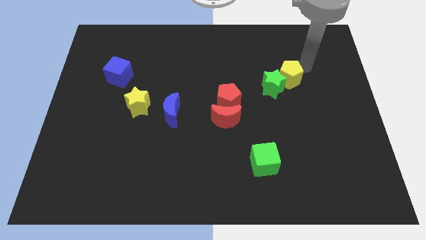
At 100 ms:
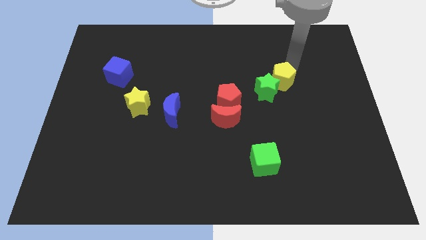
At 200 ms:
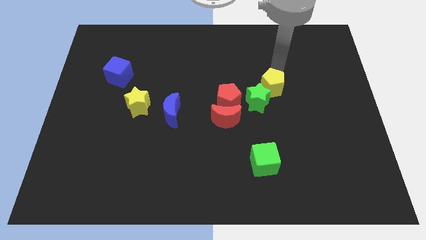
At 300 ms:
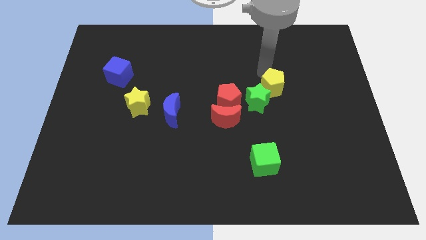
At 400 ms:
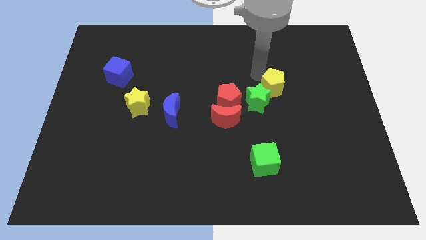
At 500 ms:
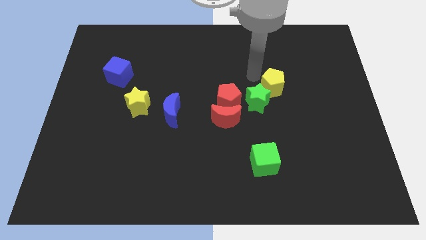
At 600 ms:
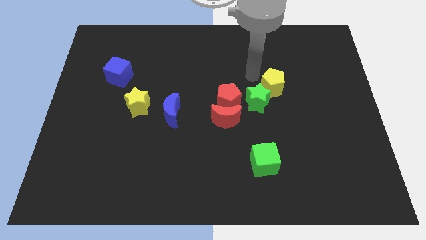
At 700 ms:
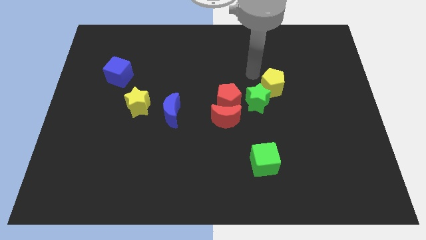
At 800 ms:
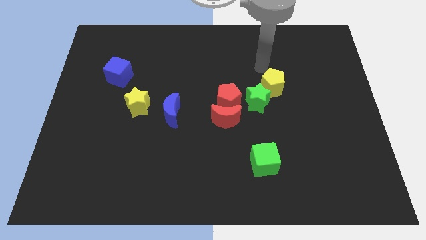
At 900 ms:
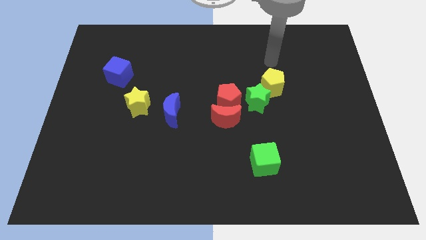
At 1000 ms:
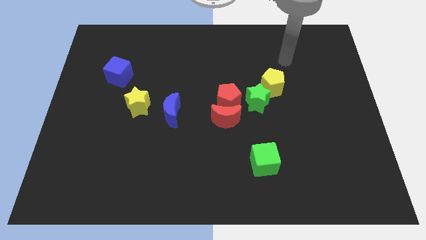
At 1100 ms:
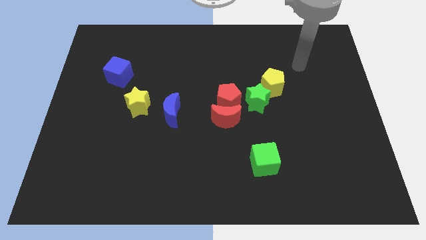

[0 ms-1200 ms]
move the yellow pentagon slightly towards the green star

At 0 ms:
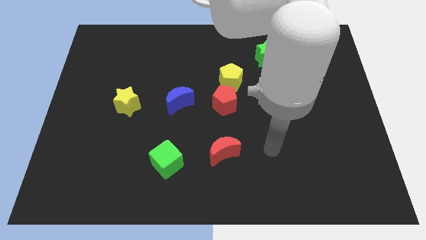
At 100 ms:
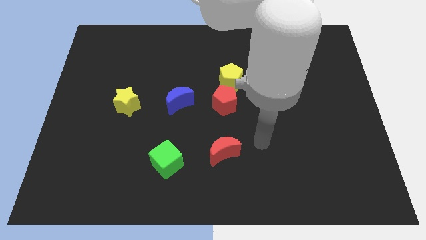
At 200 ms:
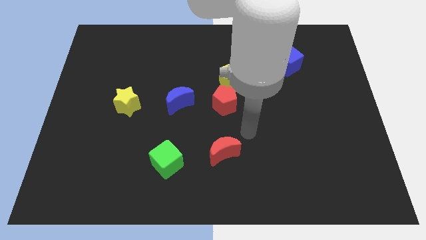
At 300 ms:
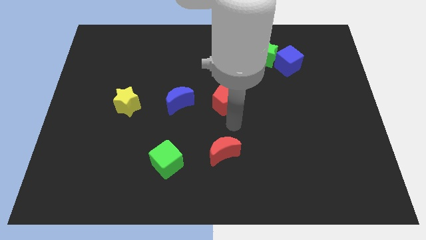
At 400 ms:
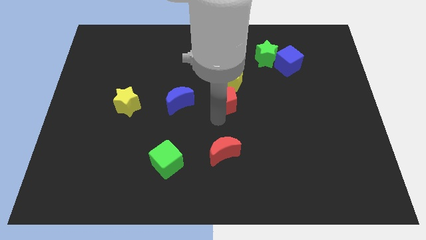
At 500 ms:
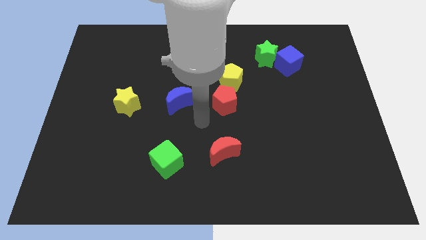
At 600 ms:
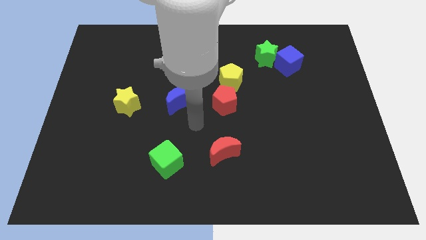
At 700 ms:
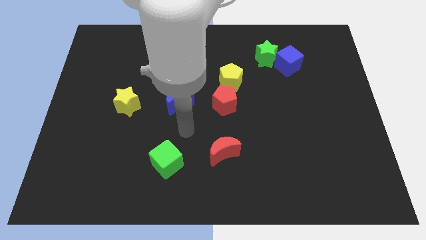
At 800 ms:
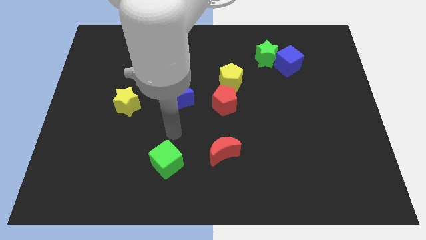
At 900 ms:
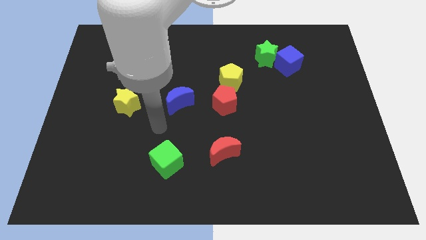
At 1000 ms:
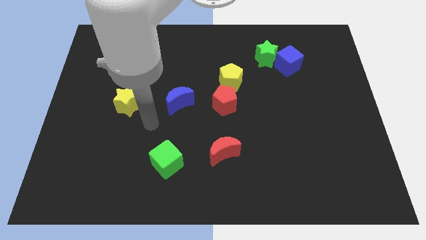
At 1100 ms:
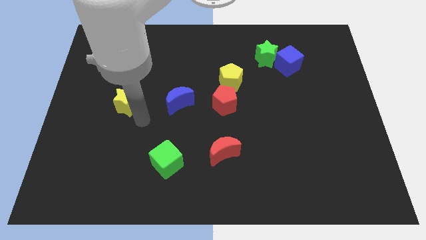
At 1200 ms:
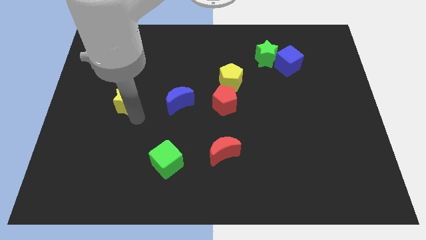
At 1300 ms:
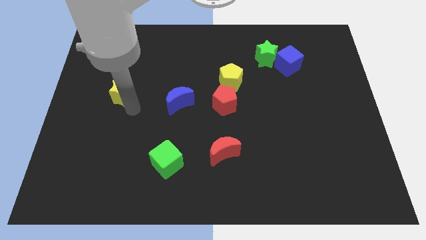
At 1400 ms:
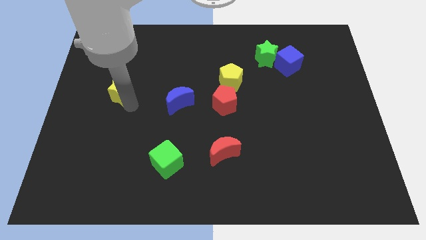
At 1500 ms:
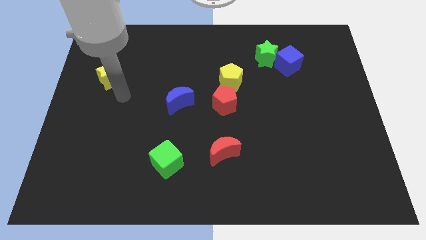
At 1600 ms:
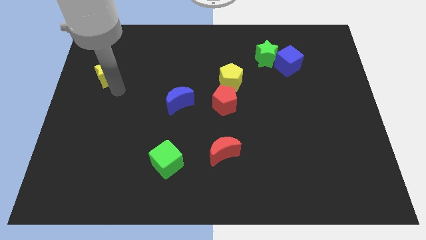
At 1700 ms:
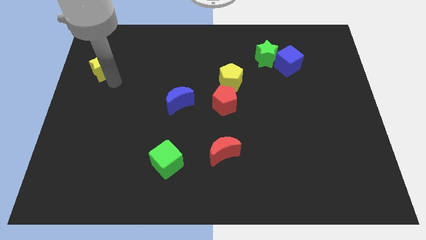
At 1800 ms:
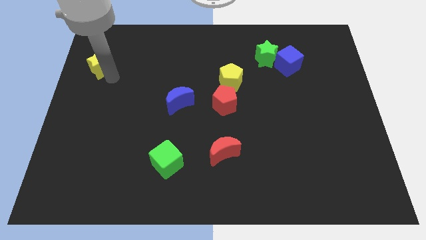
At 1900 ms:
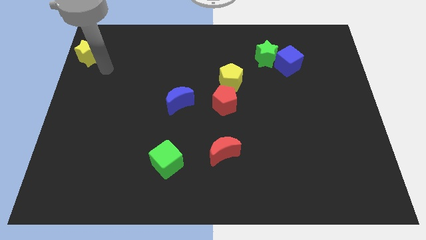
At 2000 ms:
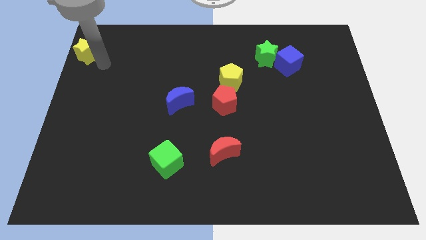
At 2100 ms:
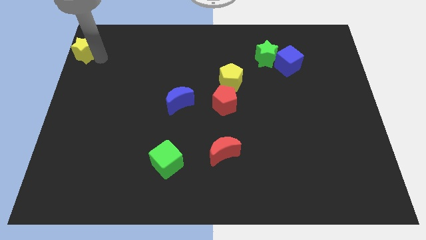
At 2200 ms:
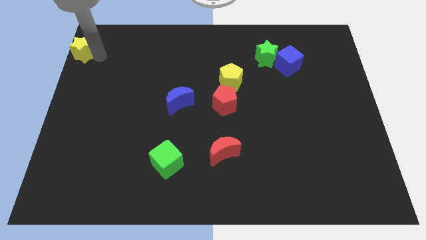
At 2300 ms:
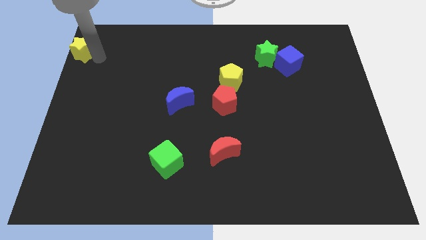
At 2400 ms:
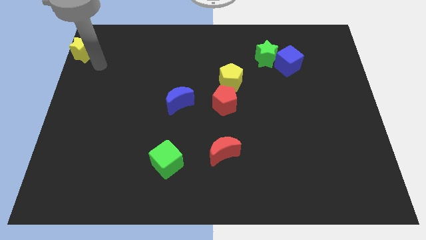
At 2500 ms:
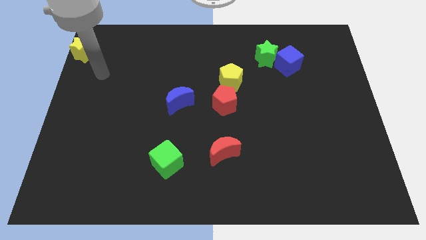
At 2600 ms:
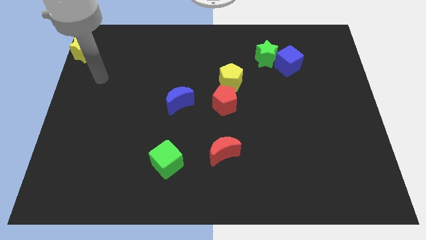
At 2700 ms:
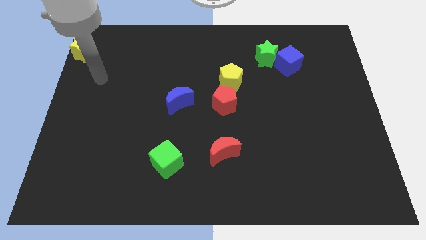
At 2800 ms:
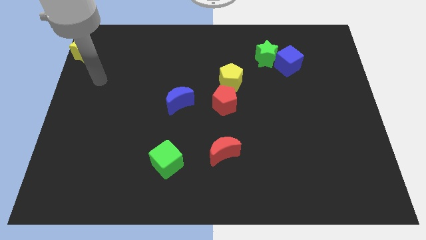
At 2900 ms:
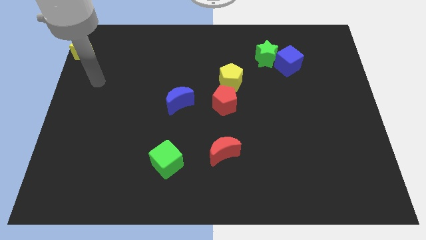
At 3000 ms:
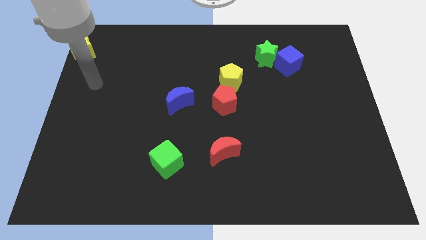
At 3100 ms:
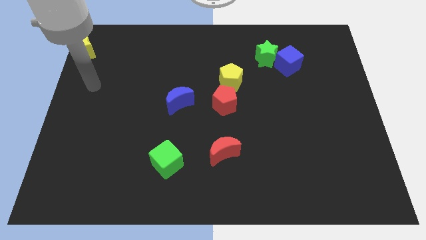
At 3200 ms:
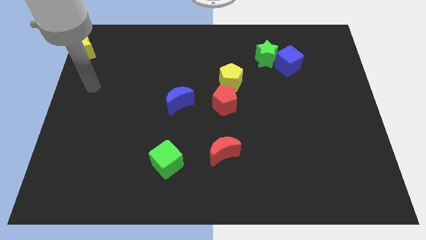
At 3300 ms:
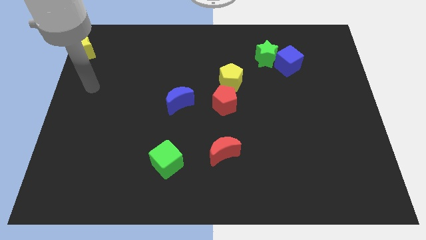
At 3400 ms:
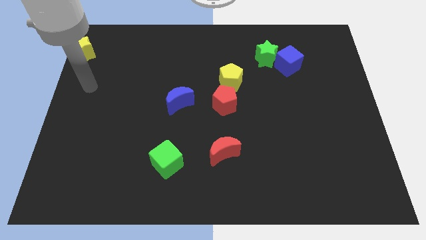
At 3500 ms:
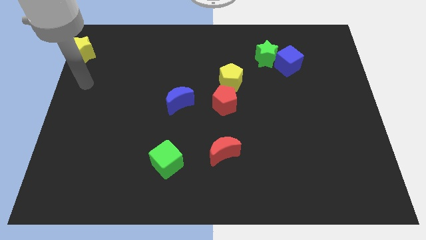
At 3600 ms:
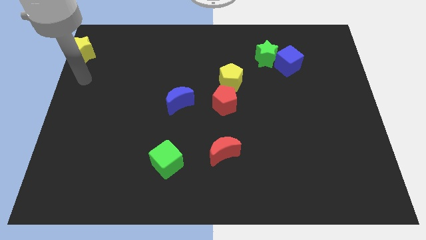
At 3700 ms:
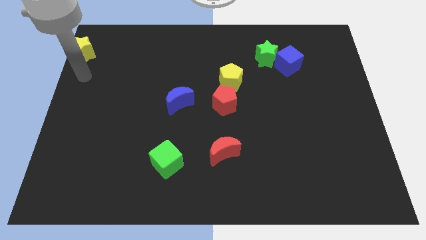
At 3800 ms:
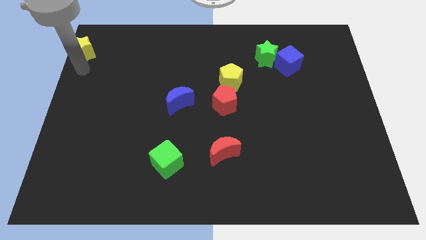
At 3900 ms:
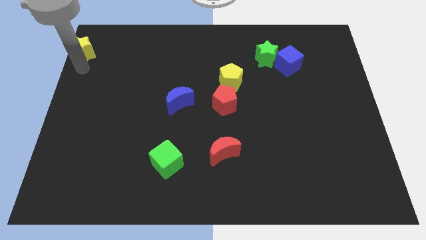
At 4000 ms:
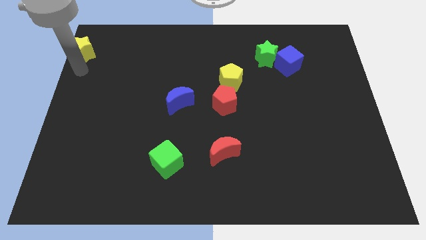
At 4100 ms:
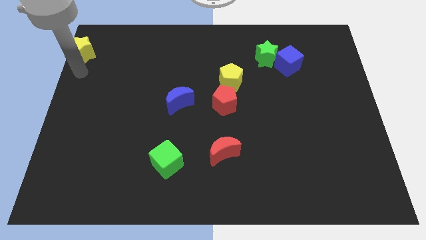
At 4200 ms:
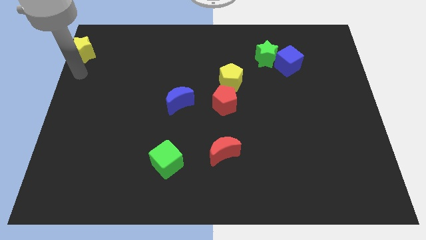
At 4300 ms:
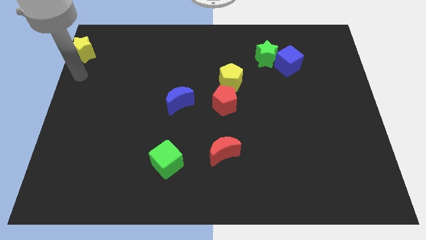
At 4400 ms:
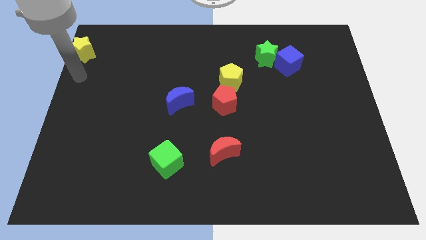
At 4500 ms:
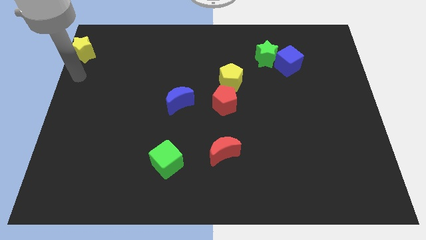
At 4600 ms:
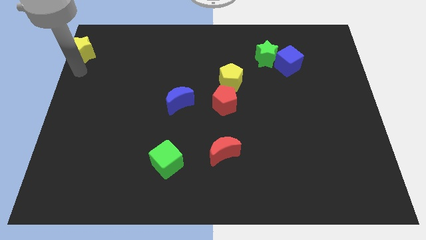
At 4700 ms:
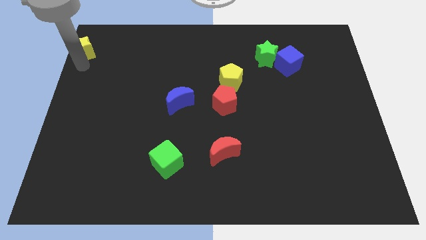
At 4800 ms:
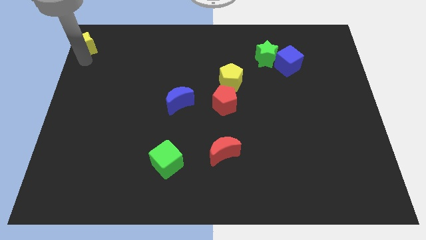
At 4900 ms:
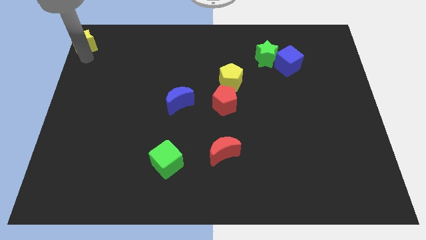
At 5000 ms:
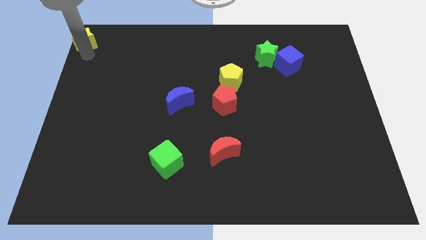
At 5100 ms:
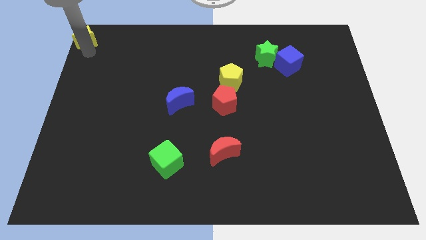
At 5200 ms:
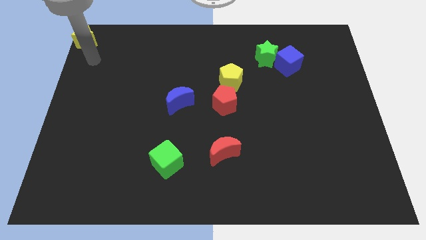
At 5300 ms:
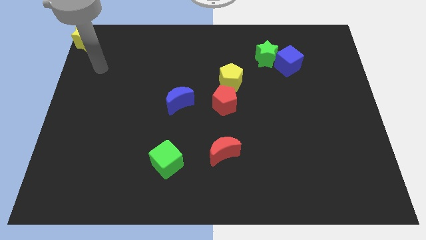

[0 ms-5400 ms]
move the yellow star to the top left corner of the board

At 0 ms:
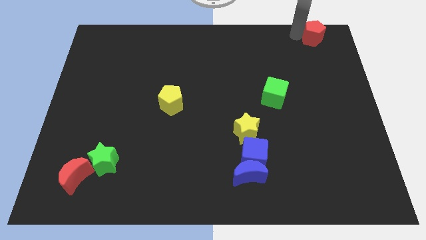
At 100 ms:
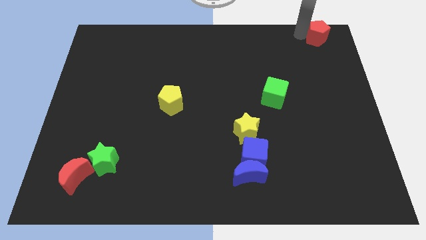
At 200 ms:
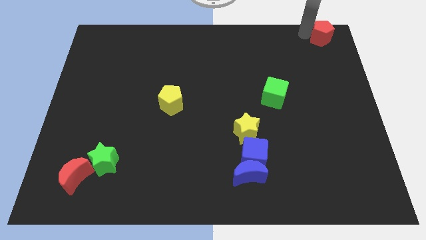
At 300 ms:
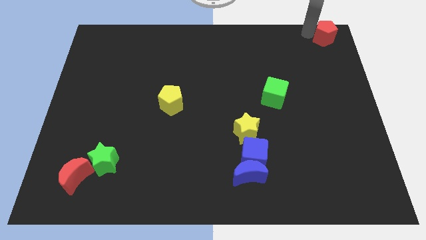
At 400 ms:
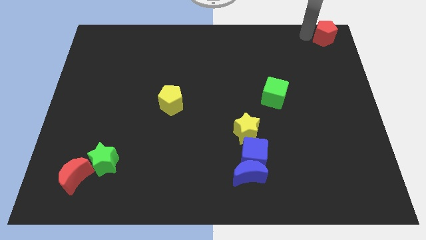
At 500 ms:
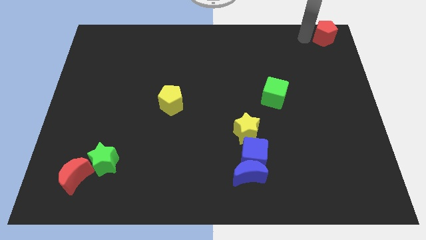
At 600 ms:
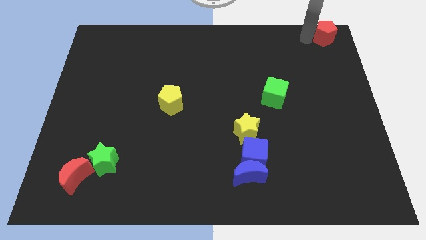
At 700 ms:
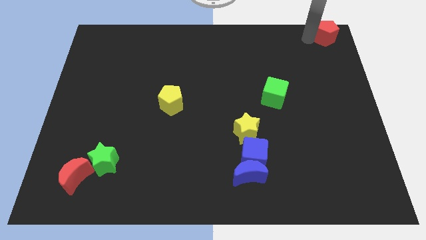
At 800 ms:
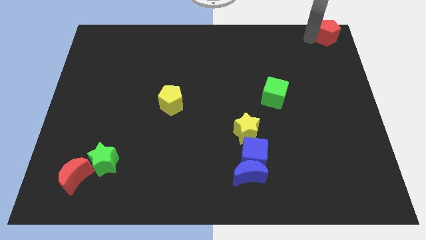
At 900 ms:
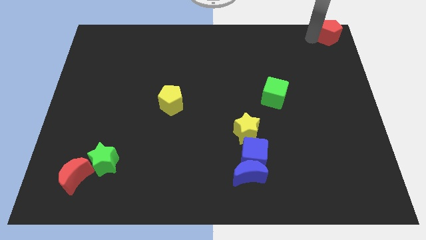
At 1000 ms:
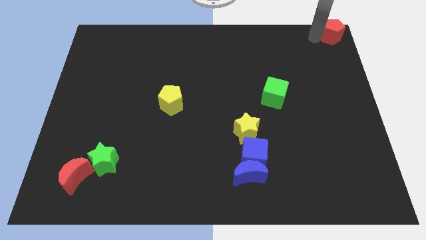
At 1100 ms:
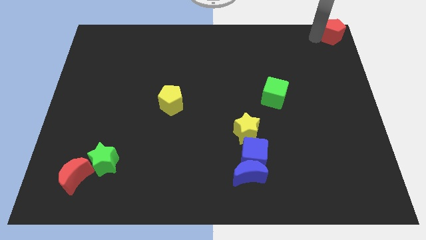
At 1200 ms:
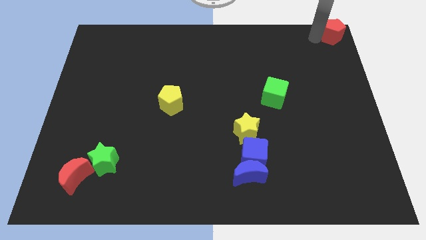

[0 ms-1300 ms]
move the red pentagon to the top right corner of the board

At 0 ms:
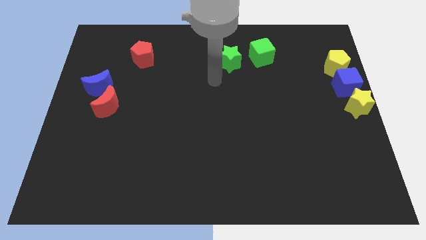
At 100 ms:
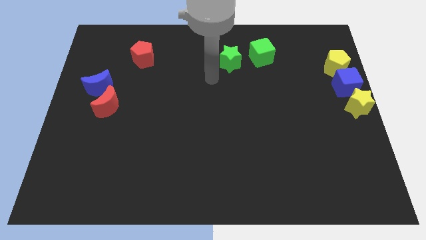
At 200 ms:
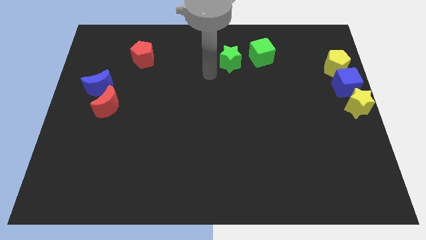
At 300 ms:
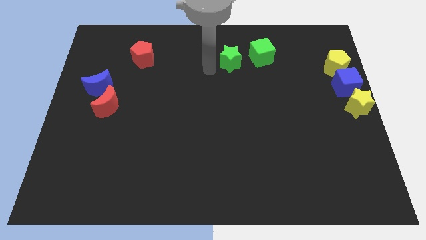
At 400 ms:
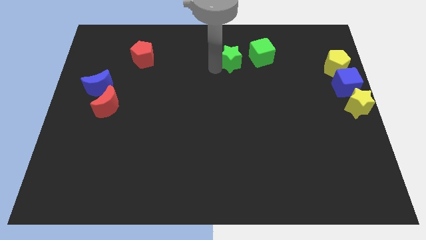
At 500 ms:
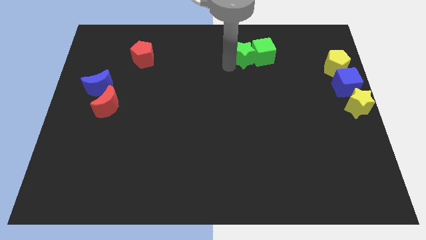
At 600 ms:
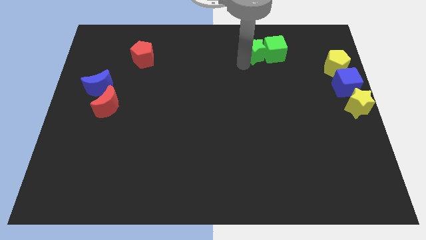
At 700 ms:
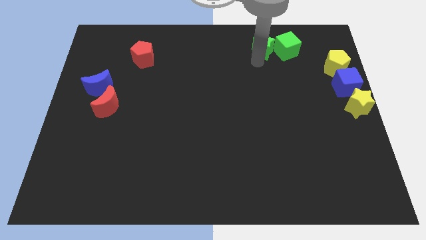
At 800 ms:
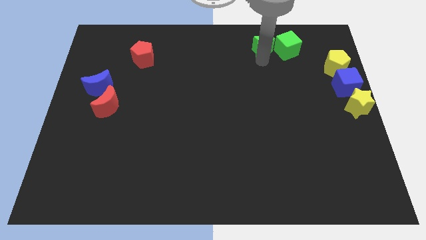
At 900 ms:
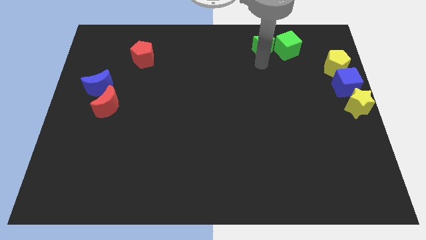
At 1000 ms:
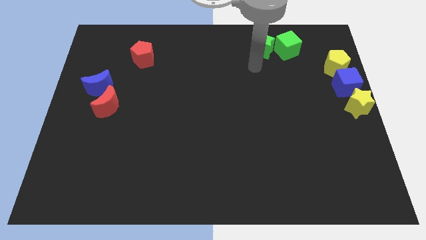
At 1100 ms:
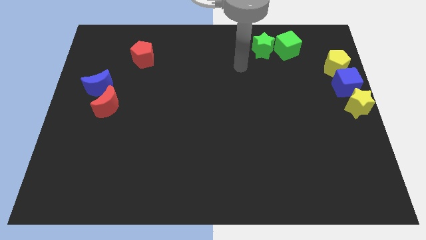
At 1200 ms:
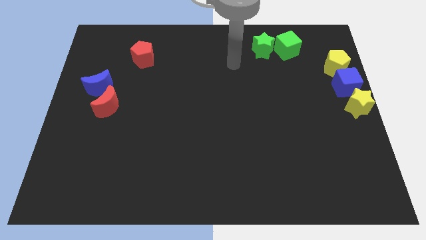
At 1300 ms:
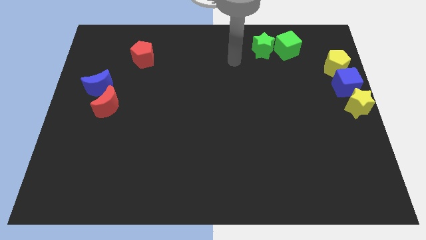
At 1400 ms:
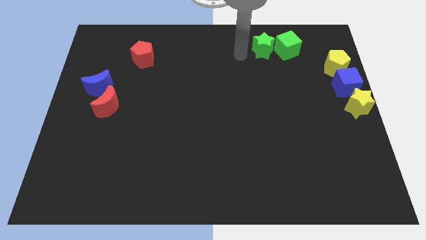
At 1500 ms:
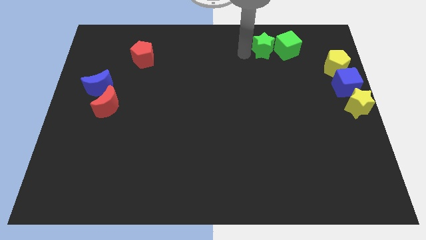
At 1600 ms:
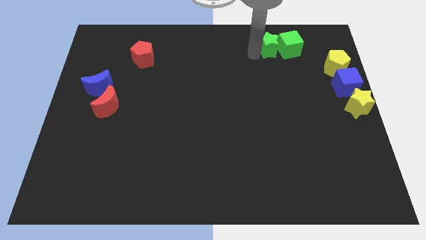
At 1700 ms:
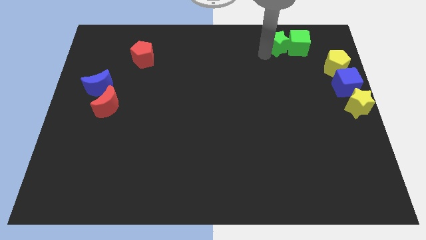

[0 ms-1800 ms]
push the green star into the green cube
